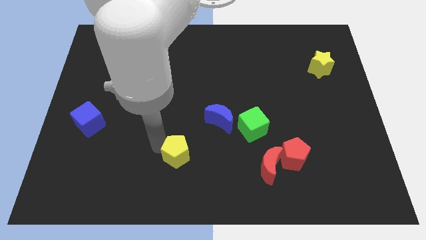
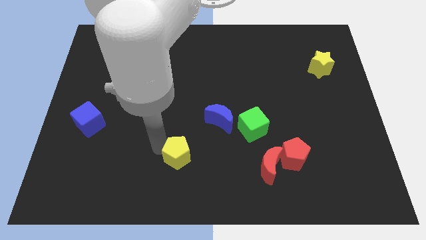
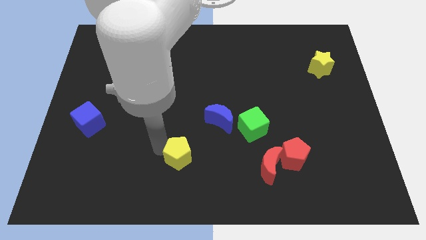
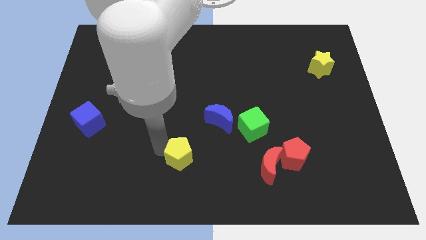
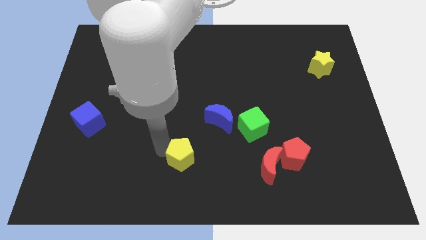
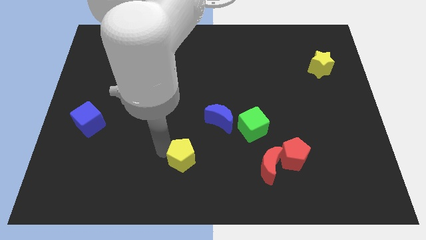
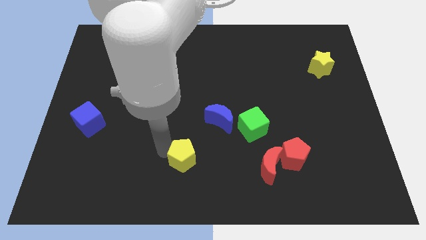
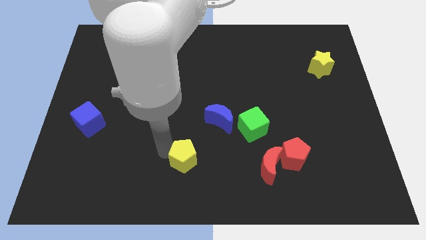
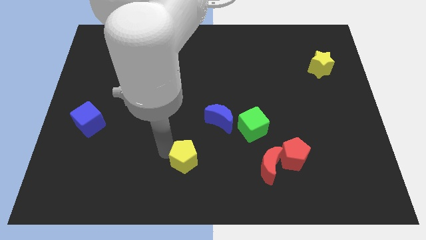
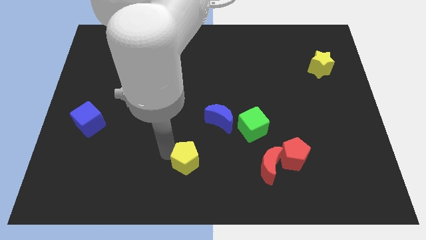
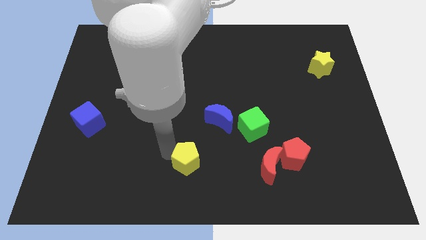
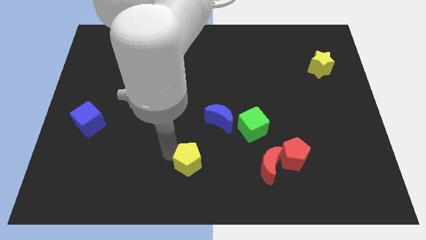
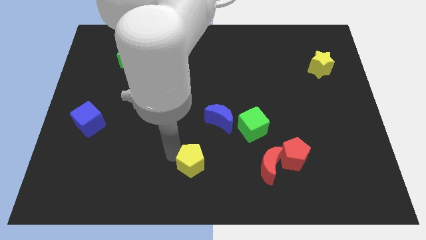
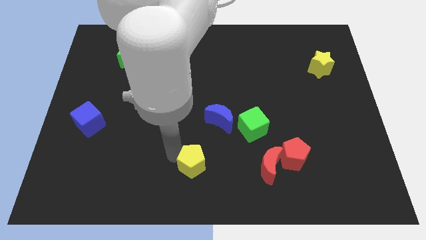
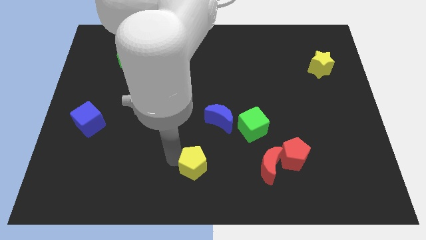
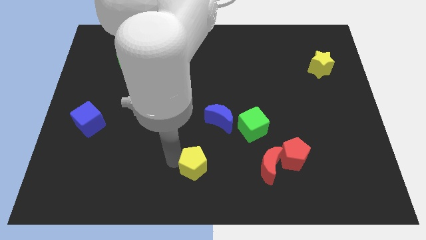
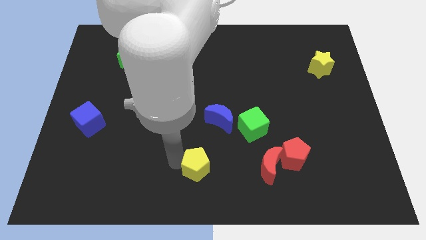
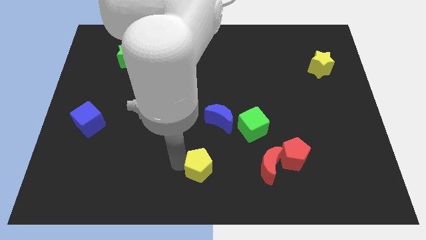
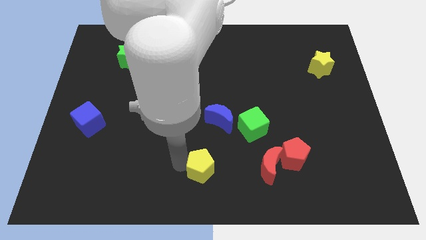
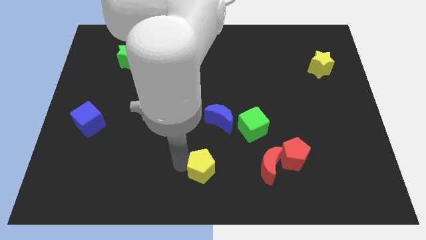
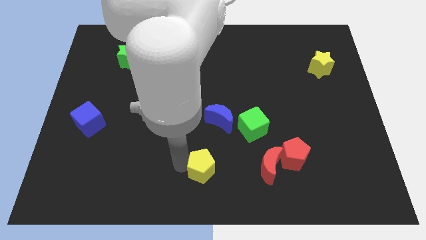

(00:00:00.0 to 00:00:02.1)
place the yellow pentagon vertically below the blue crescent

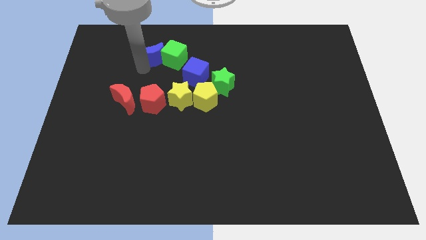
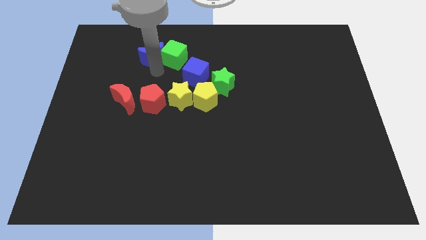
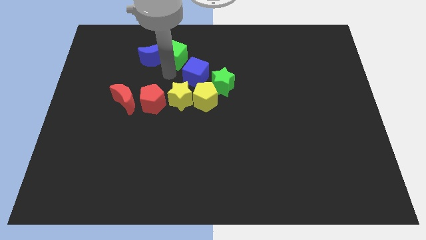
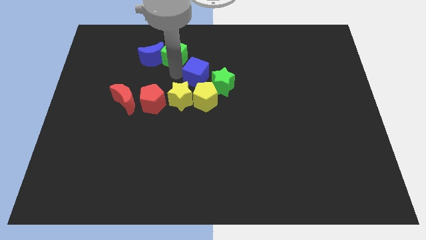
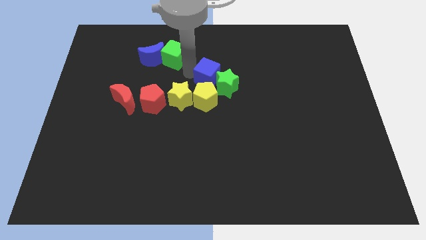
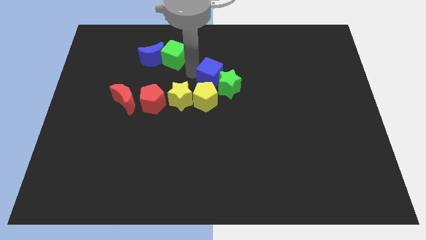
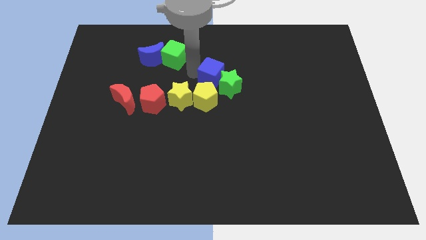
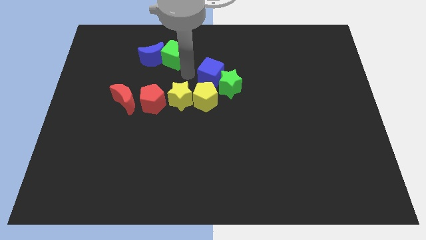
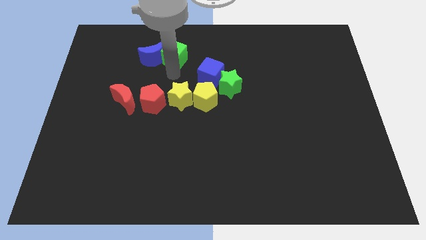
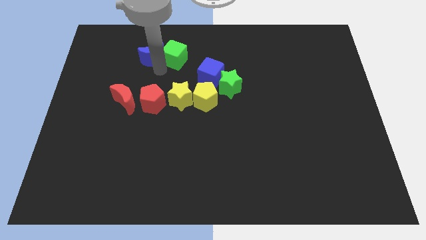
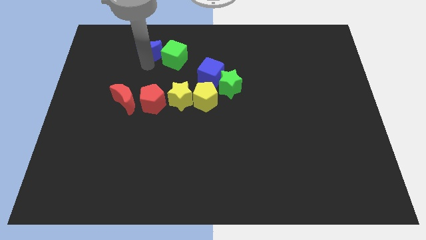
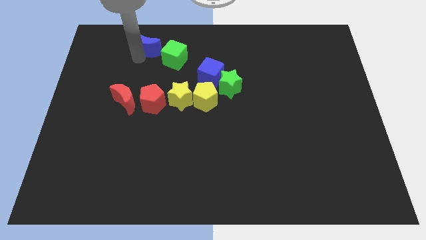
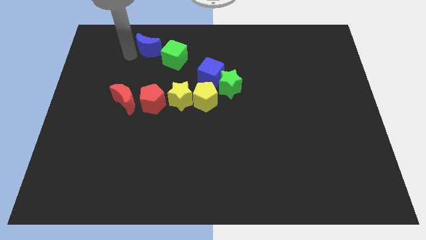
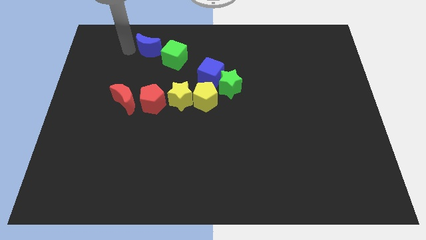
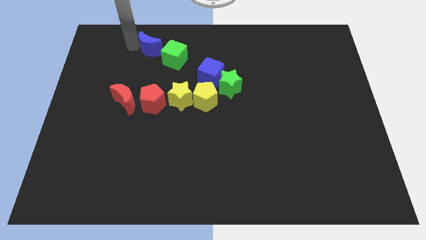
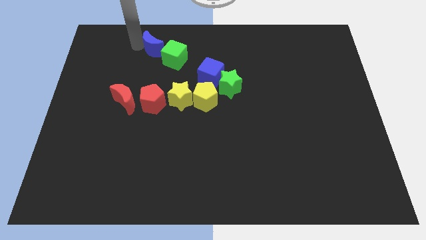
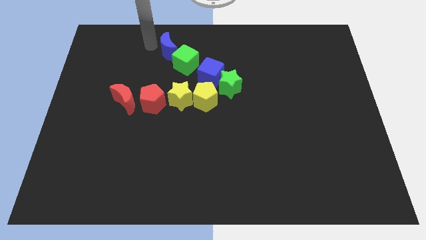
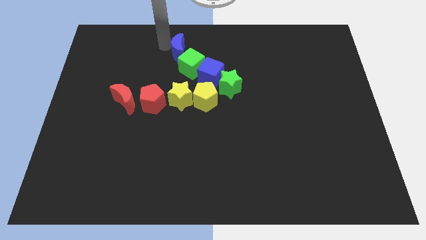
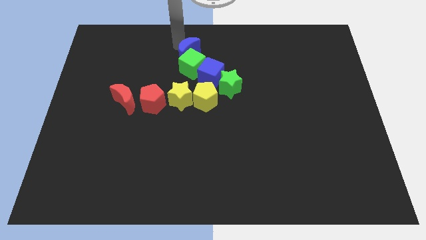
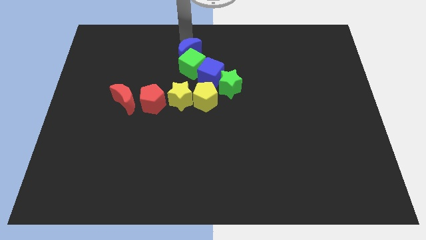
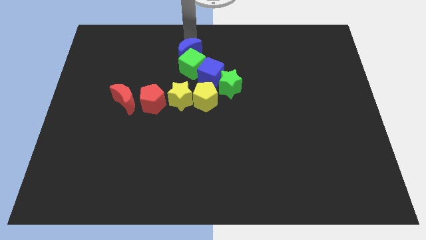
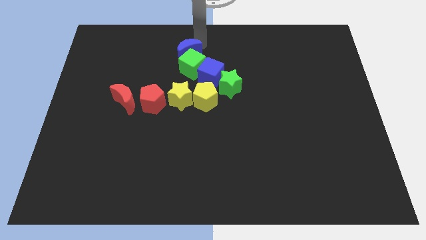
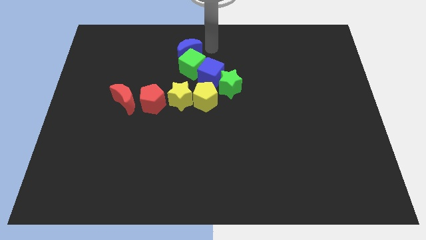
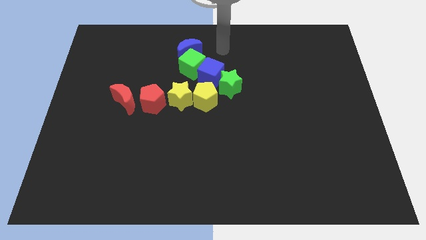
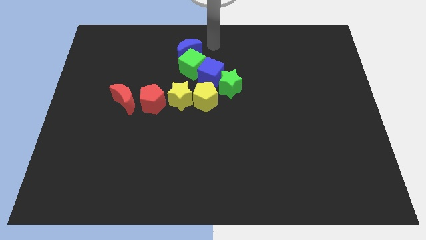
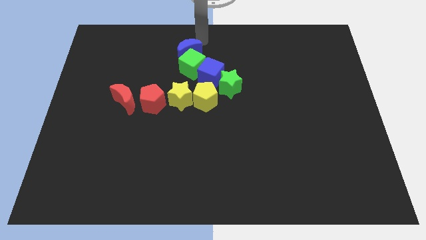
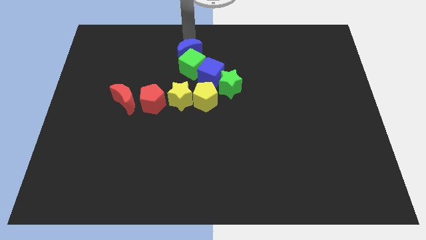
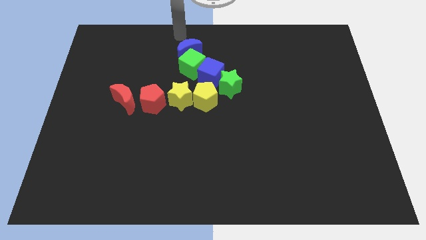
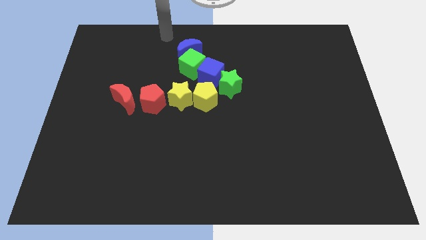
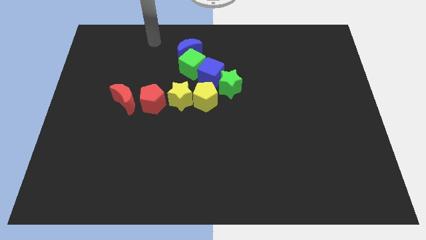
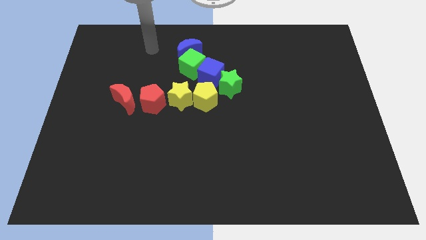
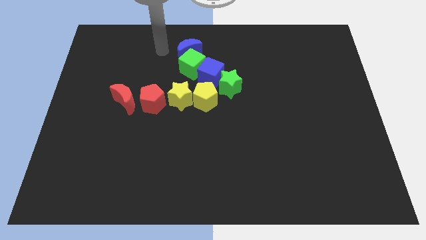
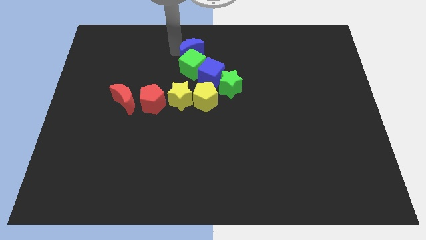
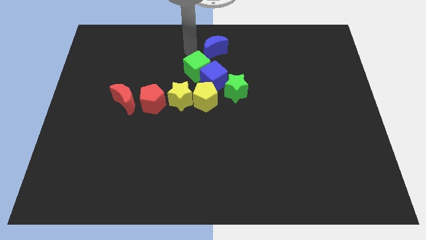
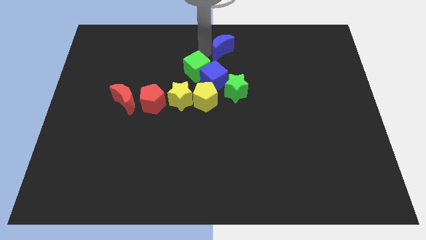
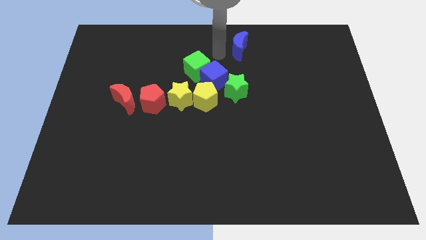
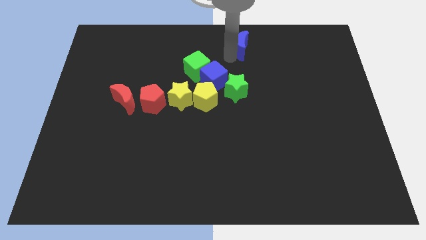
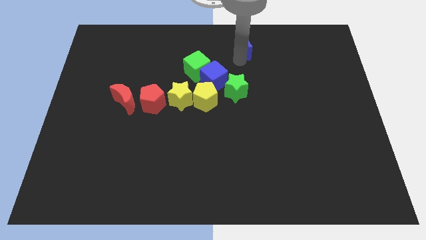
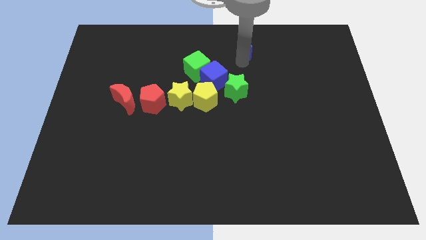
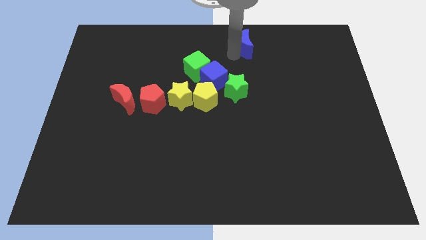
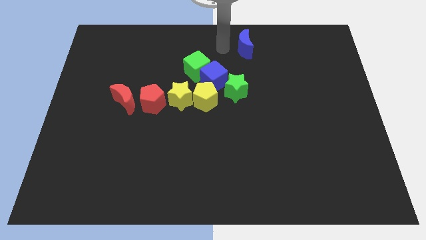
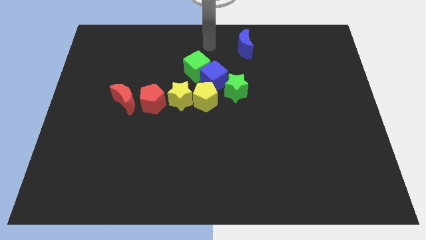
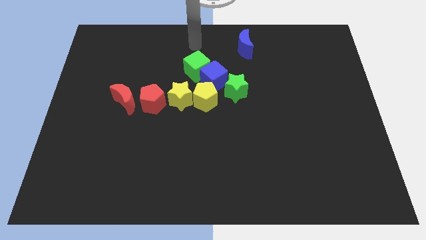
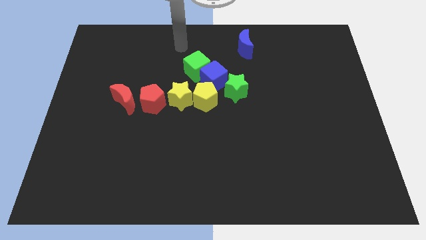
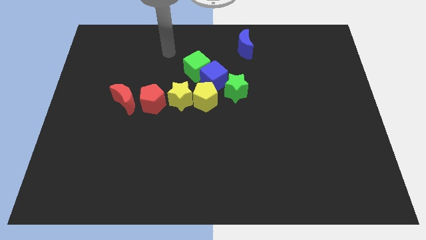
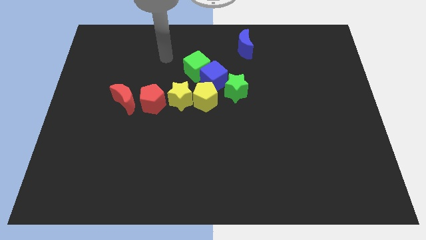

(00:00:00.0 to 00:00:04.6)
separate the blue crescent from the group of blocks

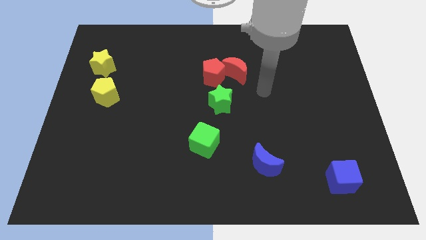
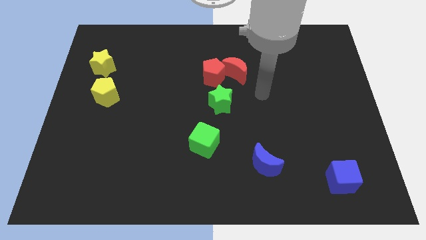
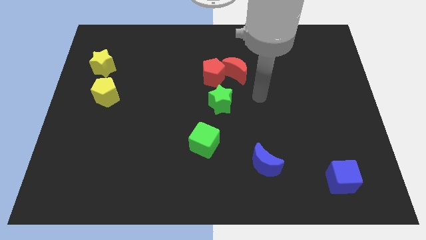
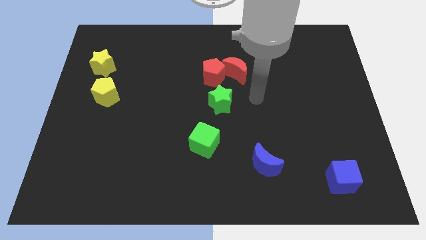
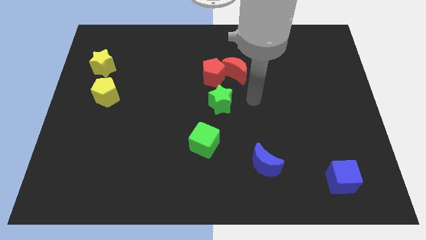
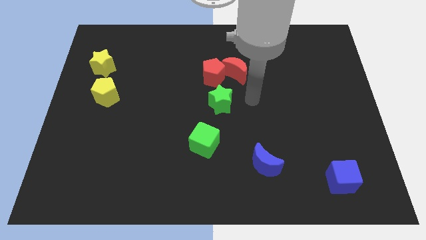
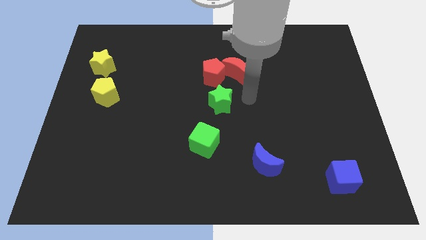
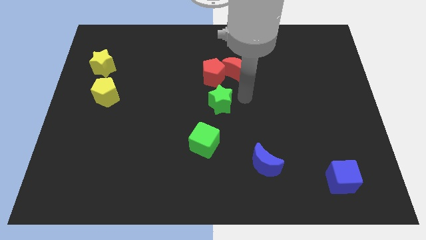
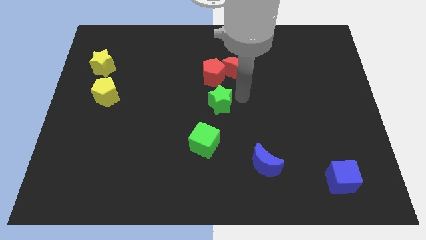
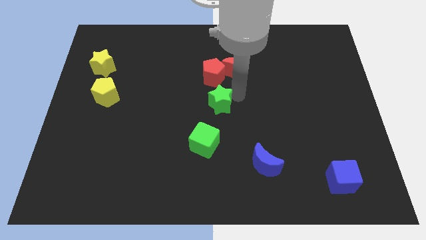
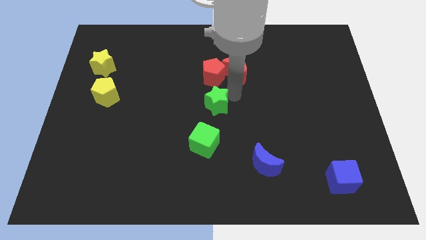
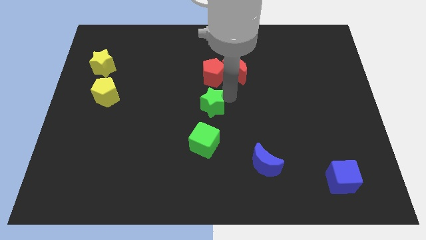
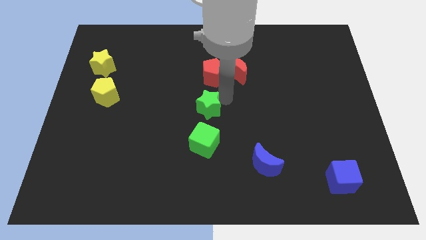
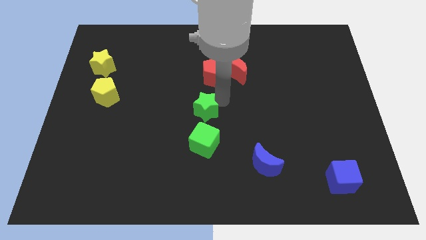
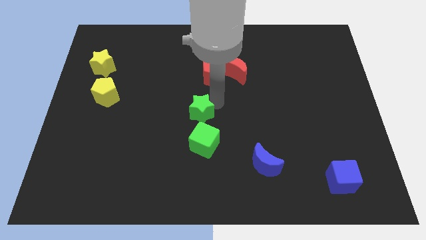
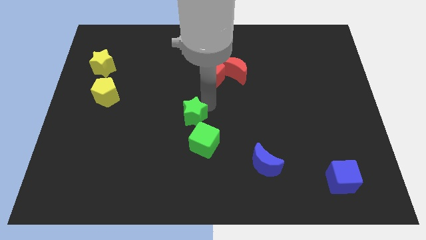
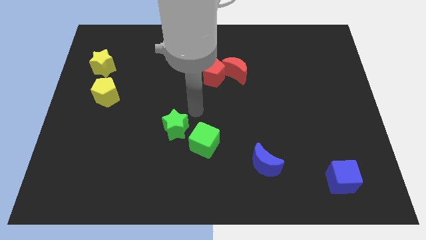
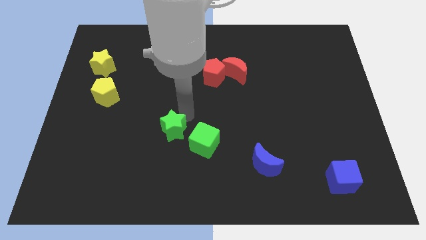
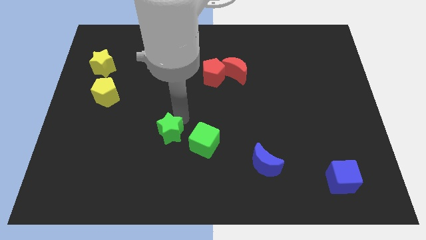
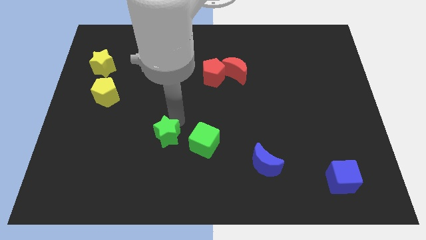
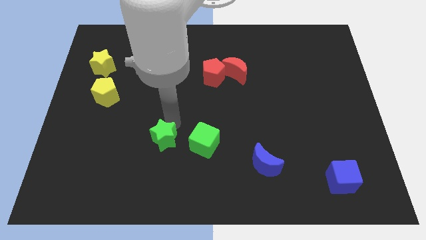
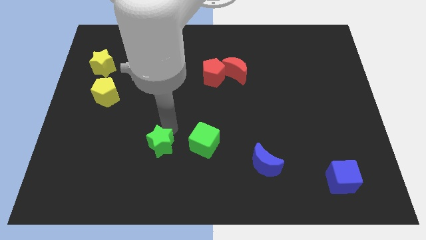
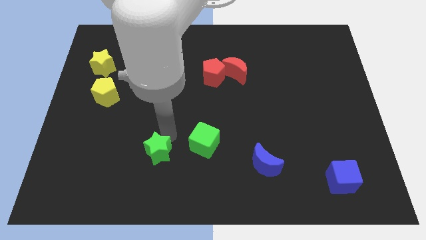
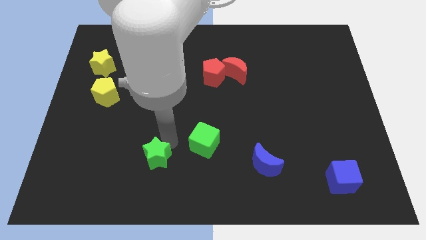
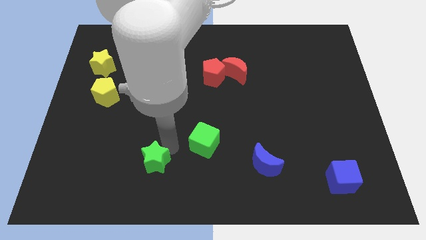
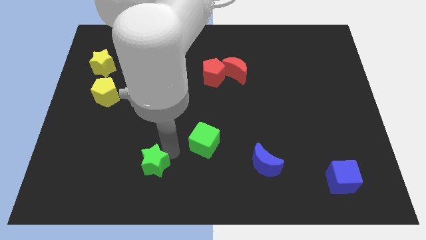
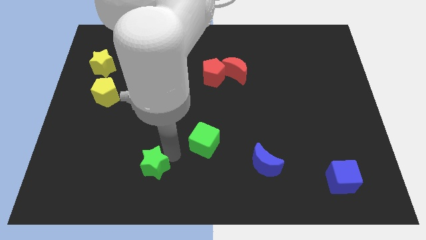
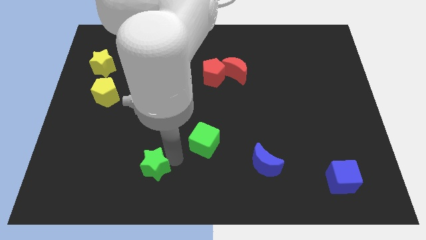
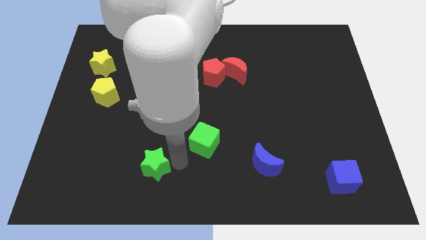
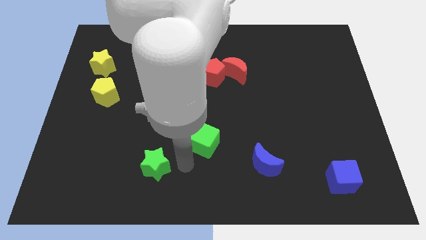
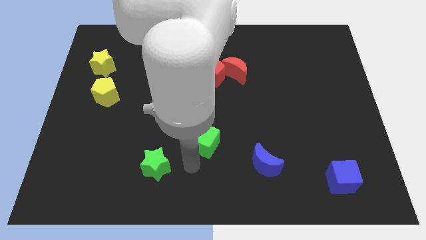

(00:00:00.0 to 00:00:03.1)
move the green star to the bottom left of the green cube
